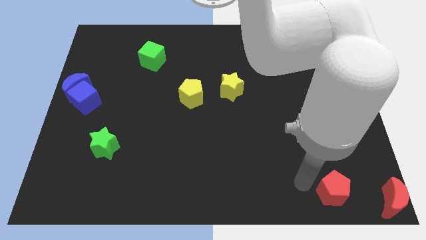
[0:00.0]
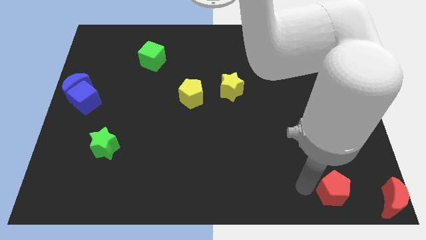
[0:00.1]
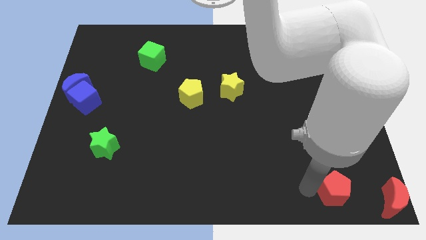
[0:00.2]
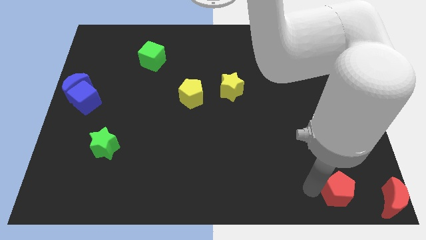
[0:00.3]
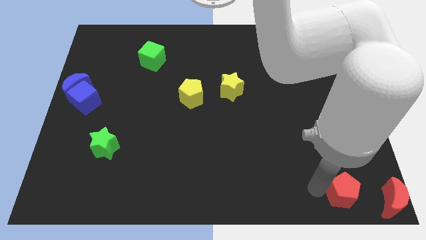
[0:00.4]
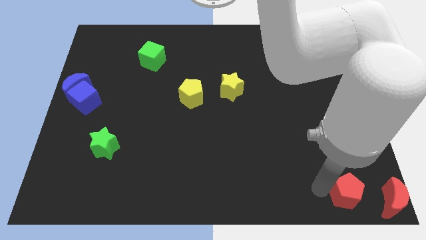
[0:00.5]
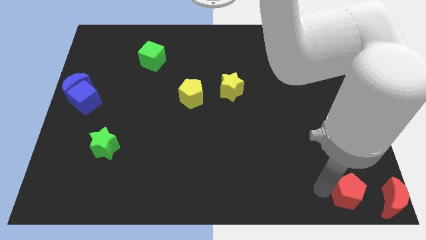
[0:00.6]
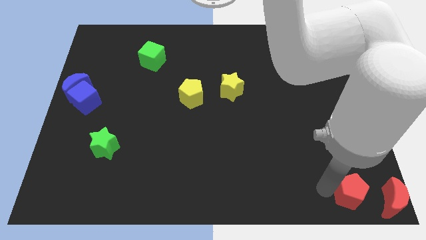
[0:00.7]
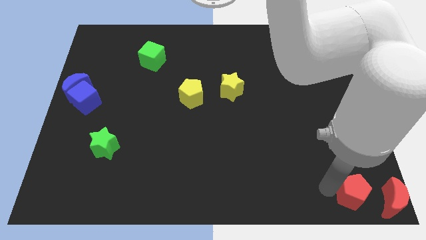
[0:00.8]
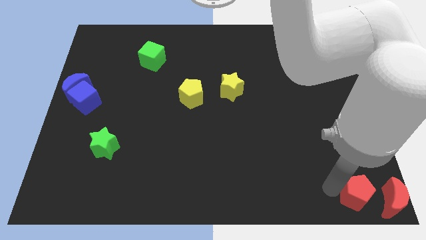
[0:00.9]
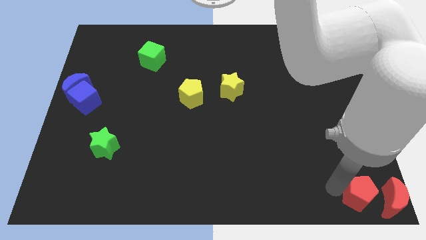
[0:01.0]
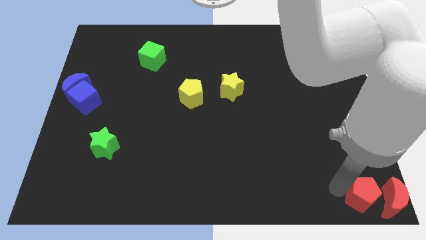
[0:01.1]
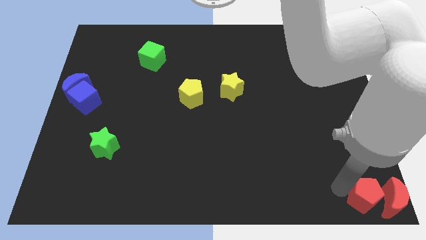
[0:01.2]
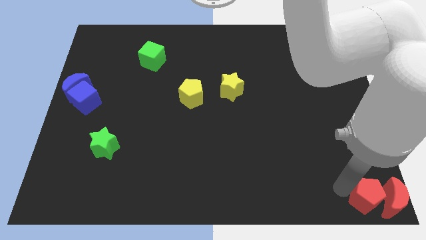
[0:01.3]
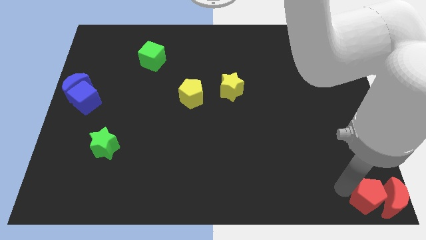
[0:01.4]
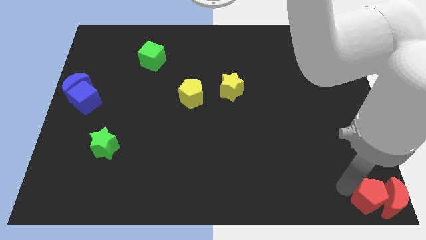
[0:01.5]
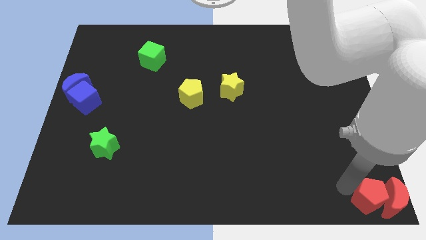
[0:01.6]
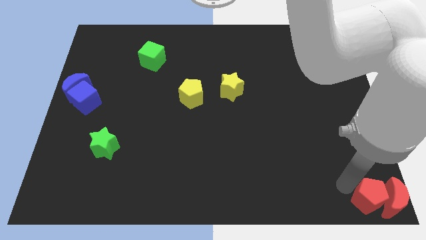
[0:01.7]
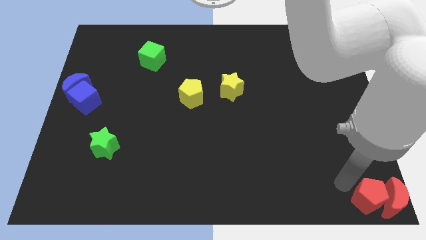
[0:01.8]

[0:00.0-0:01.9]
push the red pentagon parallel to red moon

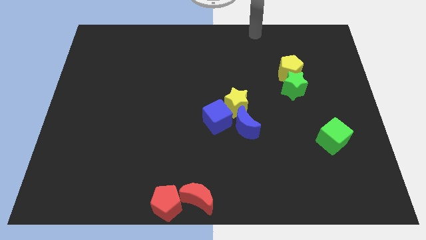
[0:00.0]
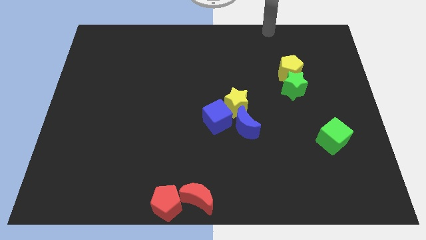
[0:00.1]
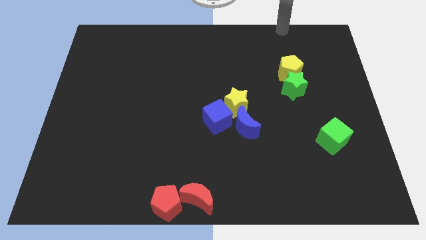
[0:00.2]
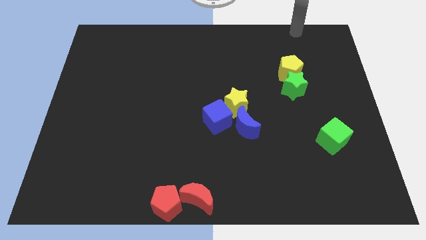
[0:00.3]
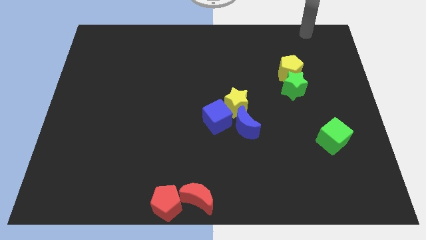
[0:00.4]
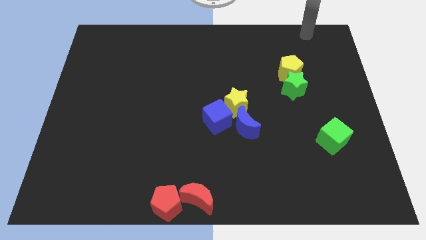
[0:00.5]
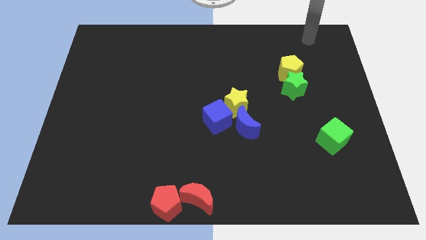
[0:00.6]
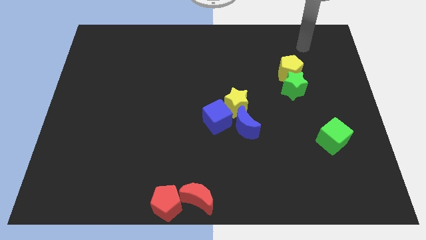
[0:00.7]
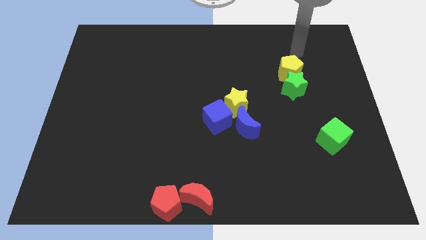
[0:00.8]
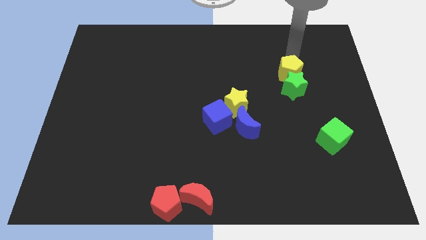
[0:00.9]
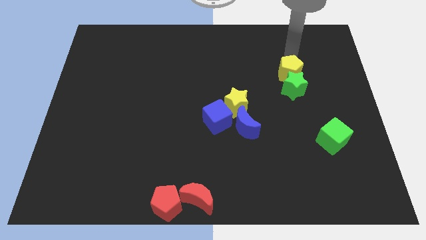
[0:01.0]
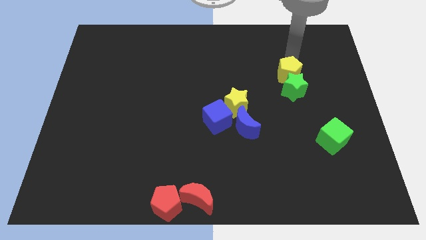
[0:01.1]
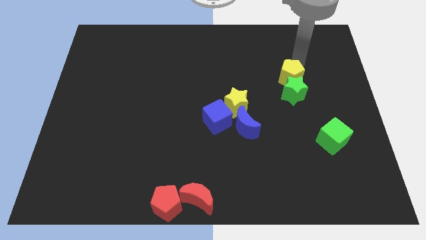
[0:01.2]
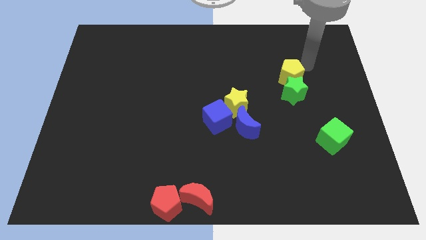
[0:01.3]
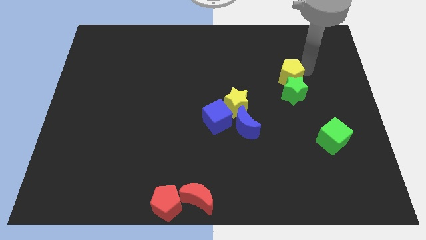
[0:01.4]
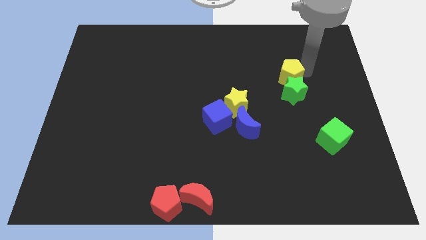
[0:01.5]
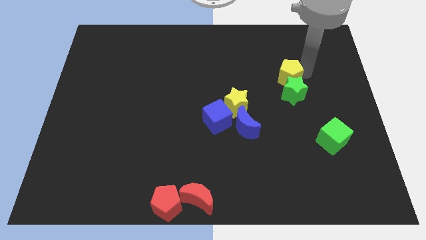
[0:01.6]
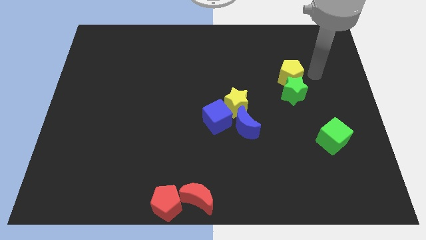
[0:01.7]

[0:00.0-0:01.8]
move the green star with the yellow pentagon towards the right center of the board

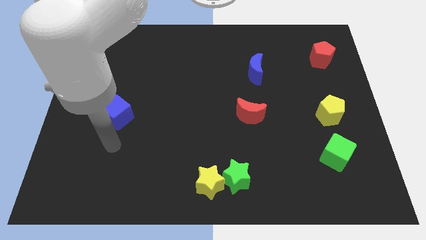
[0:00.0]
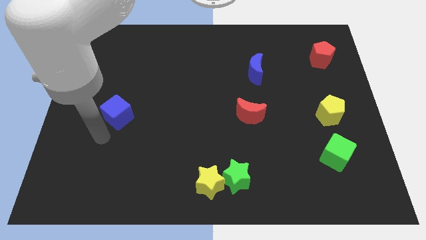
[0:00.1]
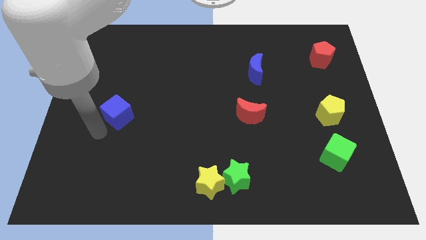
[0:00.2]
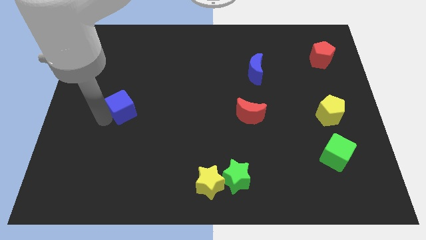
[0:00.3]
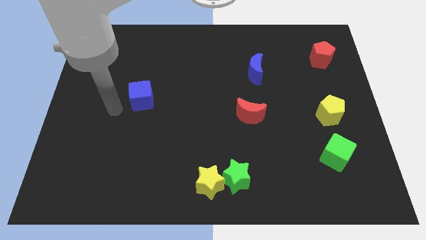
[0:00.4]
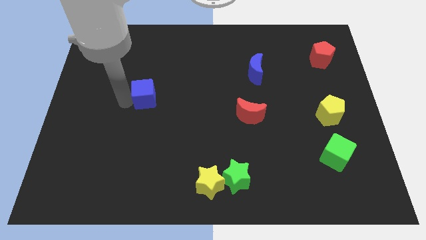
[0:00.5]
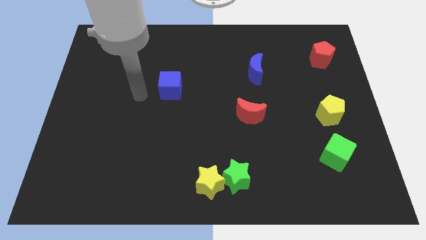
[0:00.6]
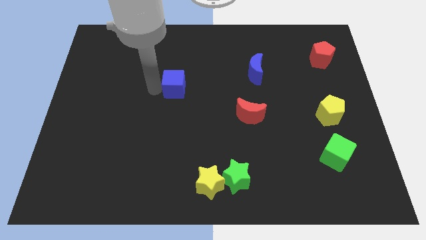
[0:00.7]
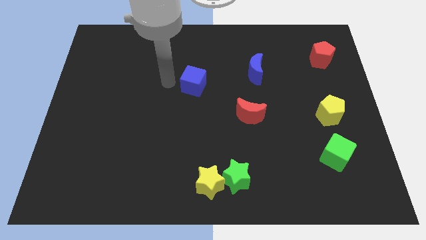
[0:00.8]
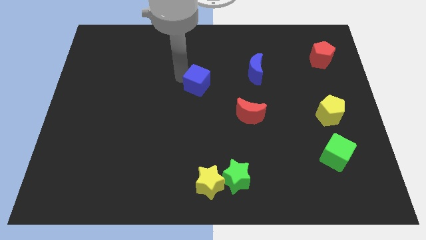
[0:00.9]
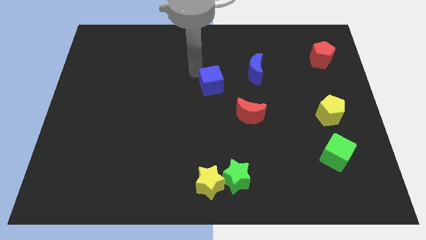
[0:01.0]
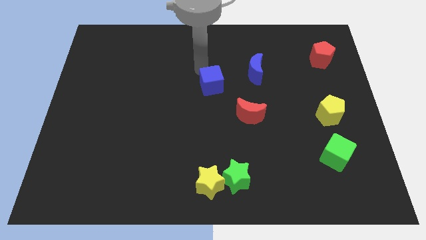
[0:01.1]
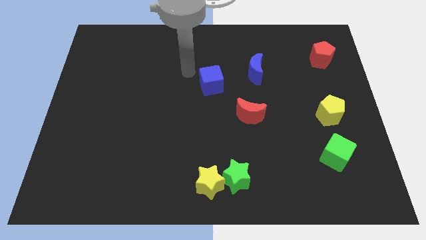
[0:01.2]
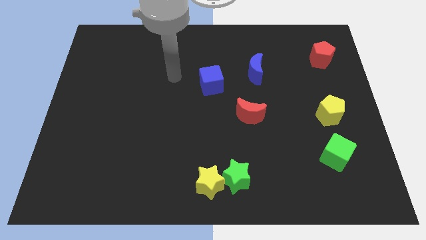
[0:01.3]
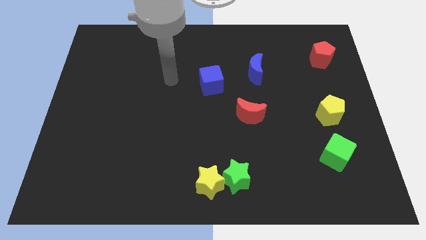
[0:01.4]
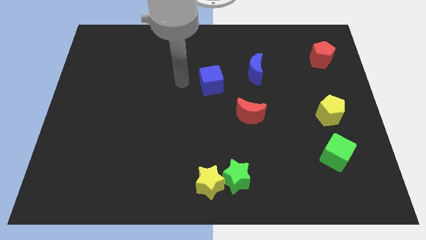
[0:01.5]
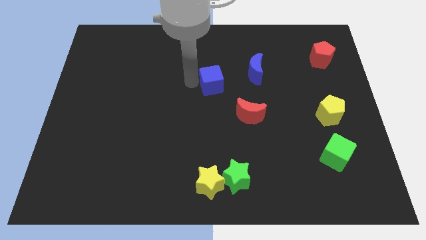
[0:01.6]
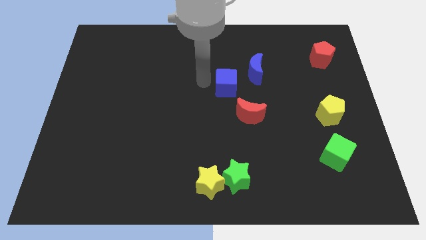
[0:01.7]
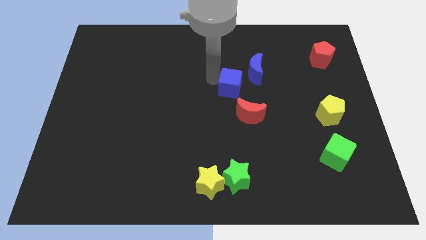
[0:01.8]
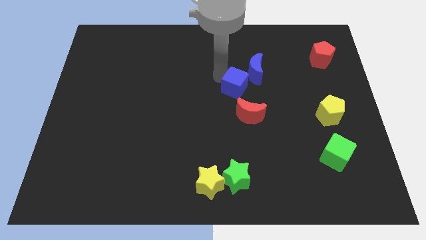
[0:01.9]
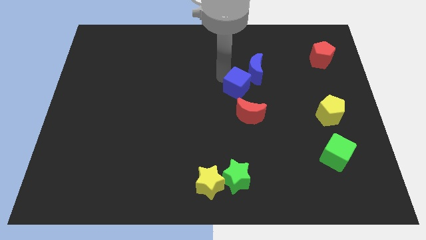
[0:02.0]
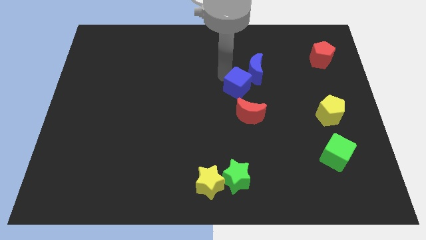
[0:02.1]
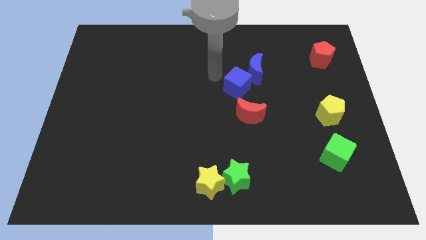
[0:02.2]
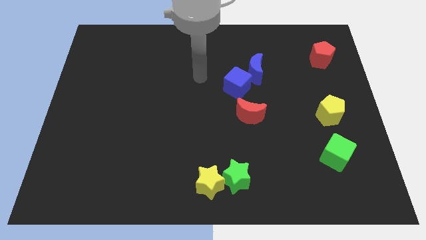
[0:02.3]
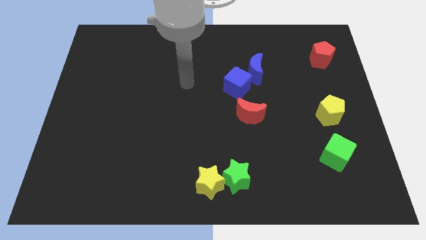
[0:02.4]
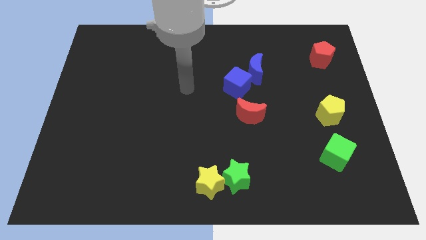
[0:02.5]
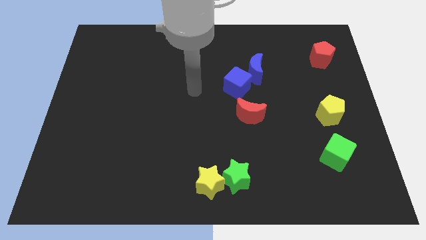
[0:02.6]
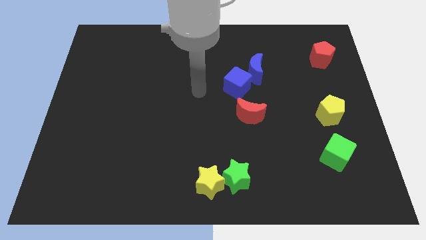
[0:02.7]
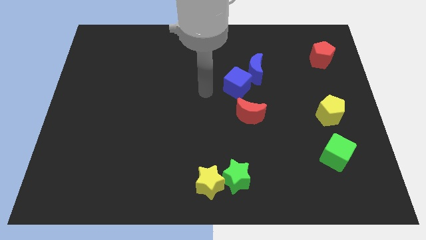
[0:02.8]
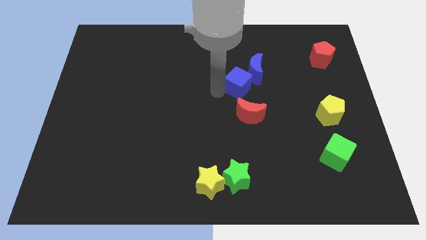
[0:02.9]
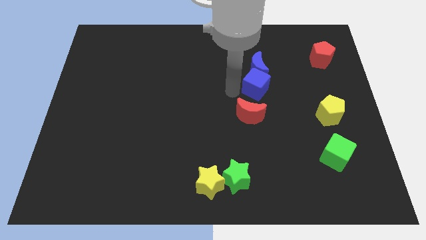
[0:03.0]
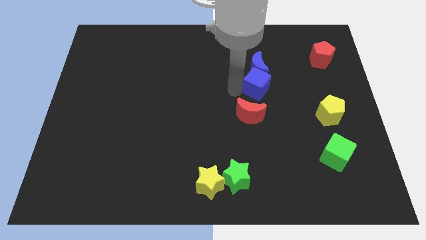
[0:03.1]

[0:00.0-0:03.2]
push the blue cube between the blue and red crescent

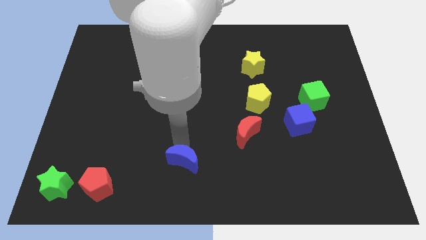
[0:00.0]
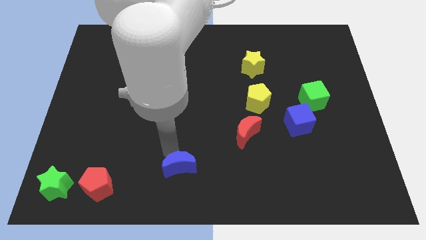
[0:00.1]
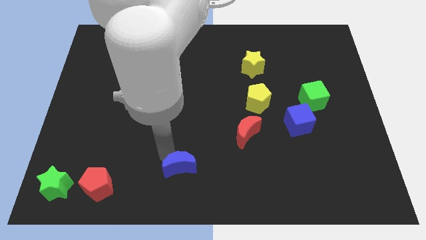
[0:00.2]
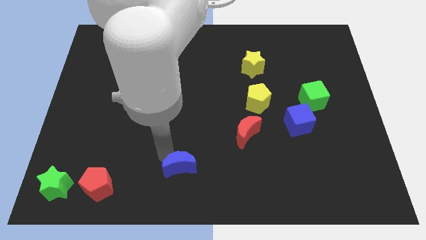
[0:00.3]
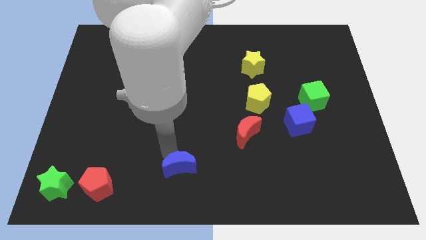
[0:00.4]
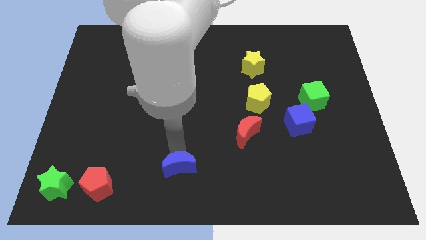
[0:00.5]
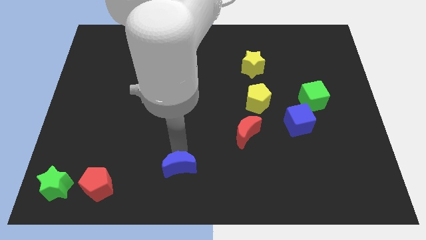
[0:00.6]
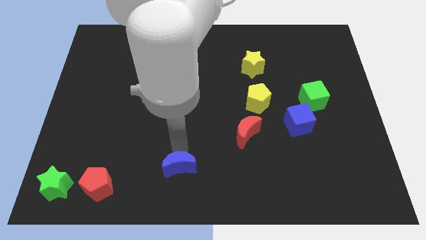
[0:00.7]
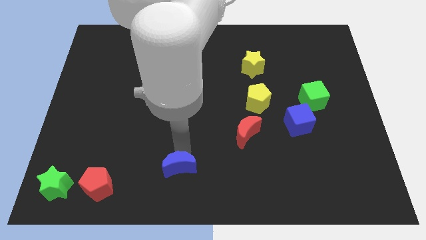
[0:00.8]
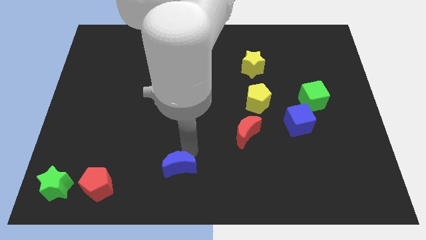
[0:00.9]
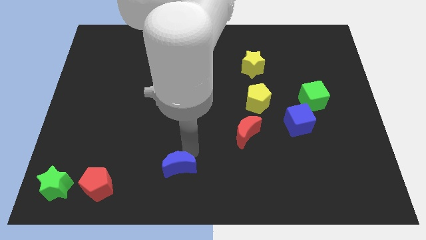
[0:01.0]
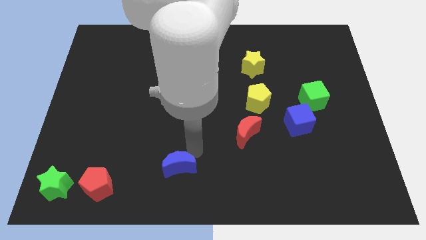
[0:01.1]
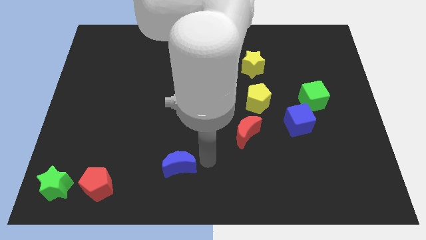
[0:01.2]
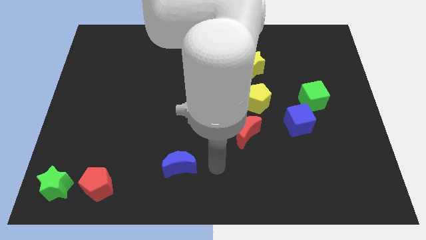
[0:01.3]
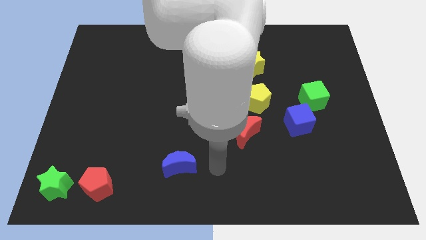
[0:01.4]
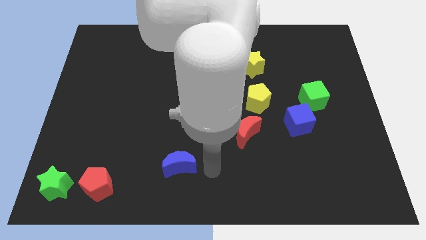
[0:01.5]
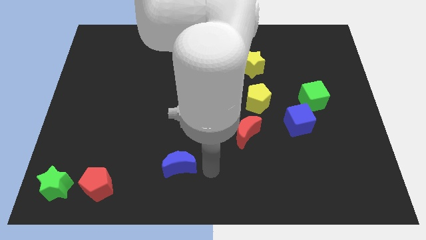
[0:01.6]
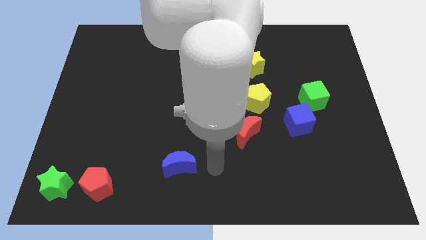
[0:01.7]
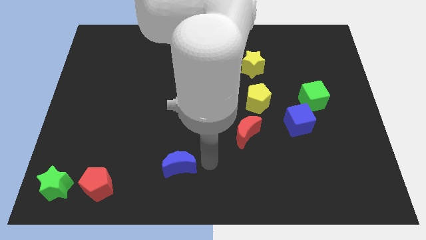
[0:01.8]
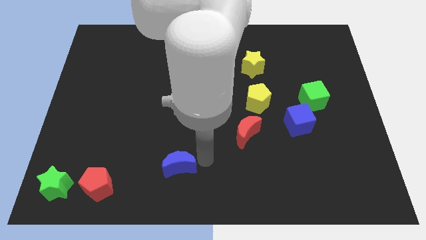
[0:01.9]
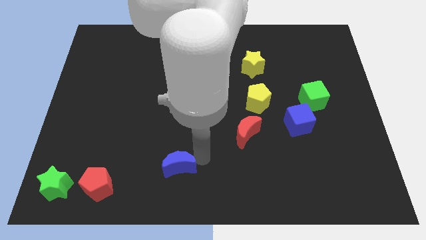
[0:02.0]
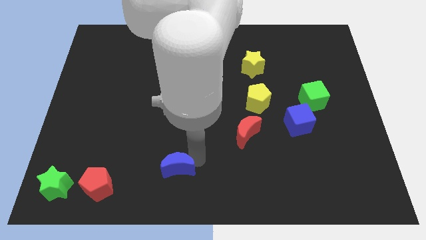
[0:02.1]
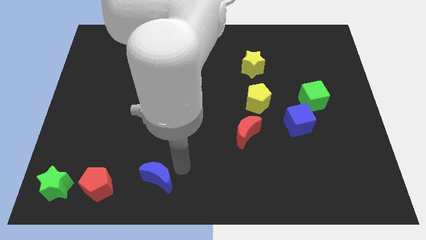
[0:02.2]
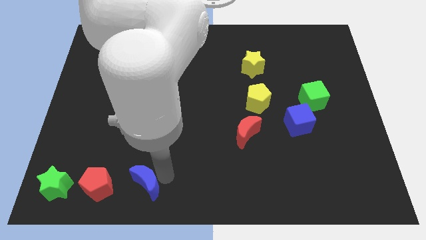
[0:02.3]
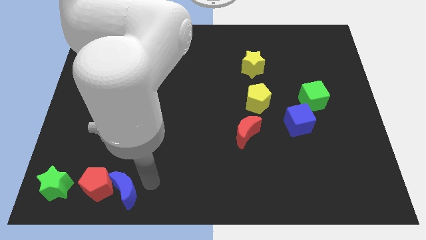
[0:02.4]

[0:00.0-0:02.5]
push the blue crescent into the red pentagon
